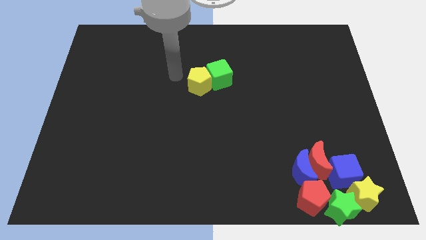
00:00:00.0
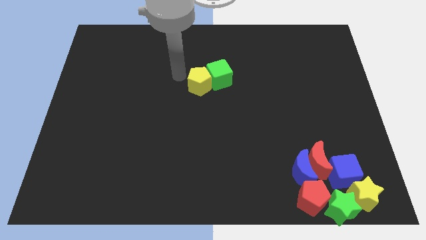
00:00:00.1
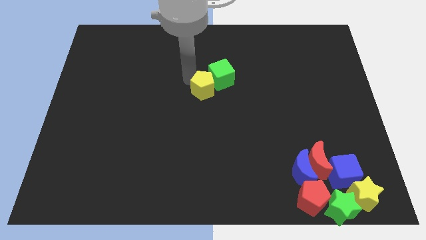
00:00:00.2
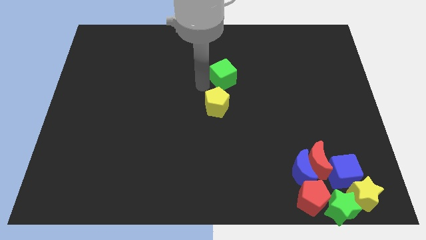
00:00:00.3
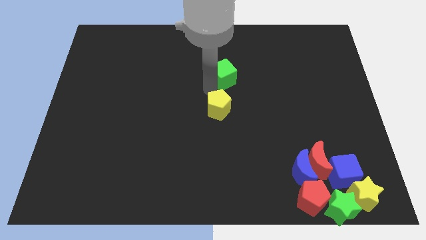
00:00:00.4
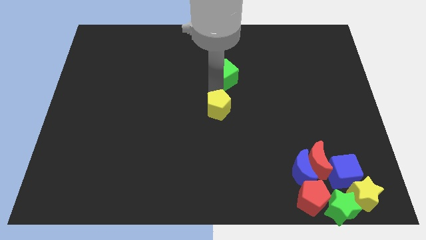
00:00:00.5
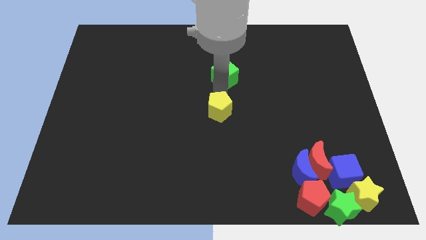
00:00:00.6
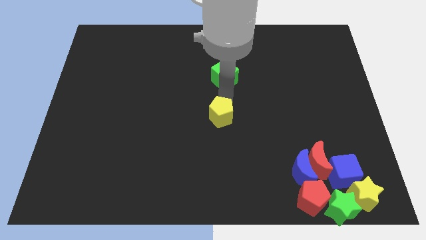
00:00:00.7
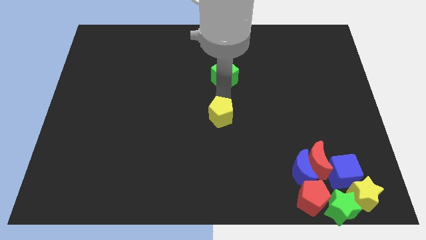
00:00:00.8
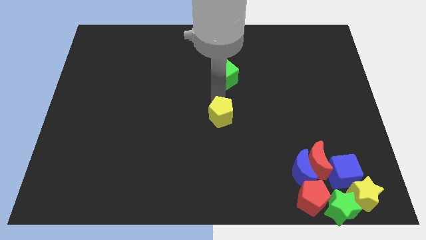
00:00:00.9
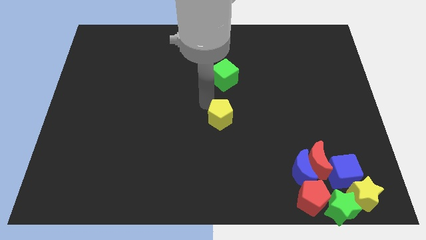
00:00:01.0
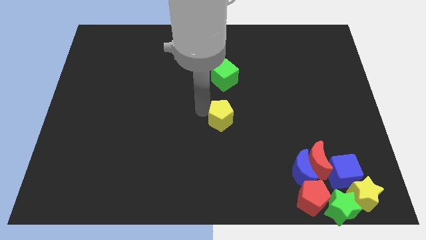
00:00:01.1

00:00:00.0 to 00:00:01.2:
separate the yellow pentagon from the green cube

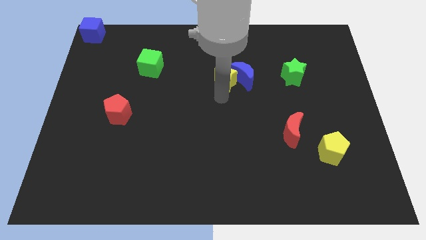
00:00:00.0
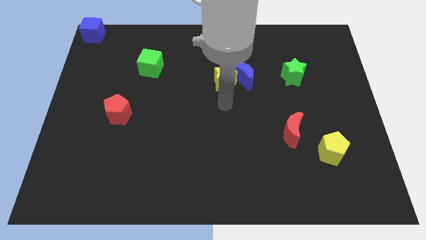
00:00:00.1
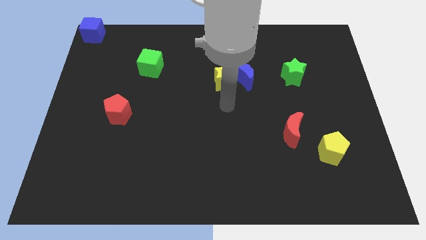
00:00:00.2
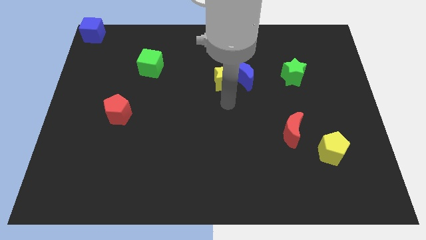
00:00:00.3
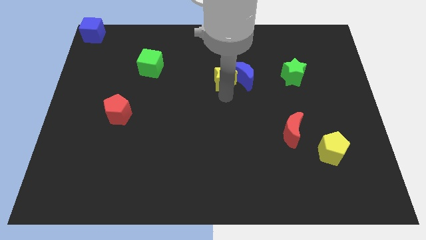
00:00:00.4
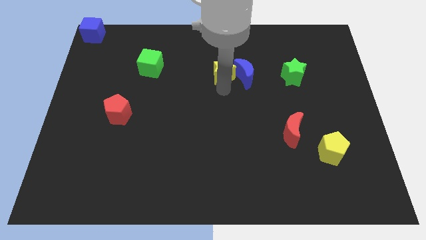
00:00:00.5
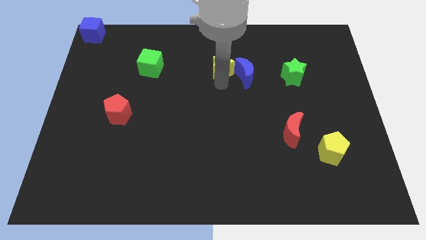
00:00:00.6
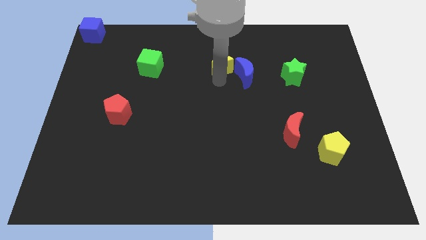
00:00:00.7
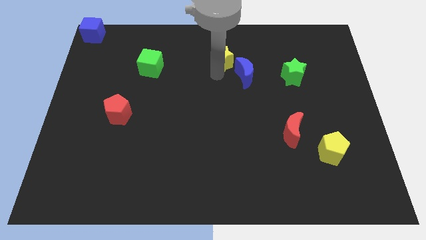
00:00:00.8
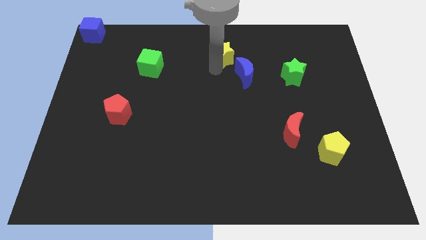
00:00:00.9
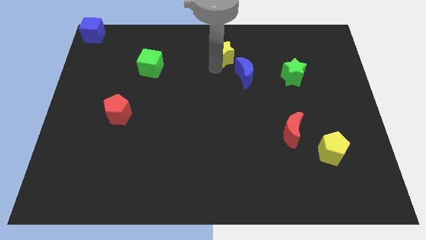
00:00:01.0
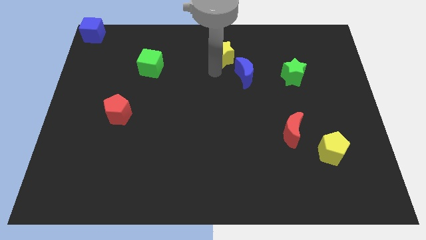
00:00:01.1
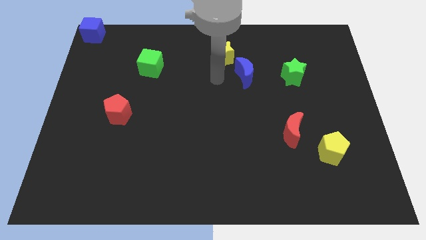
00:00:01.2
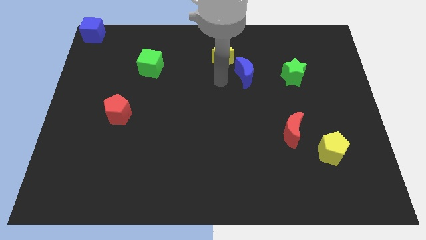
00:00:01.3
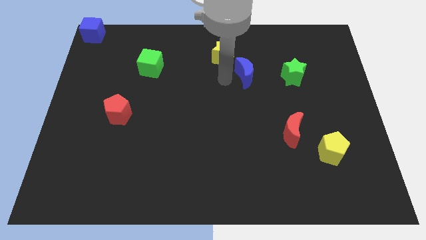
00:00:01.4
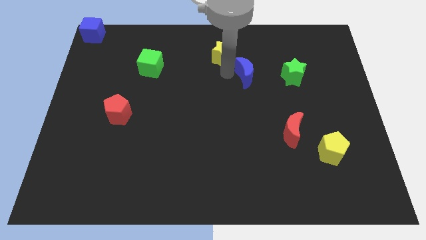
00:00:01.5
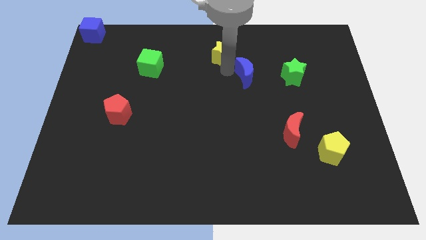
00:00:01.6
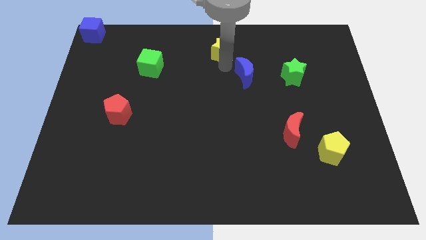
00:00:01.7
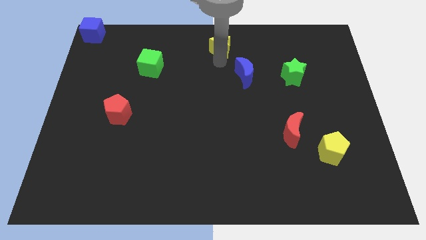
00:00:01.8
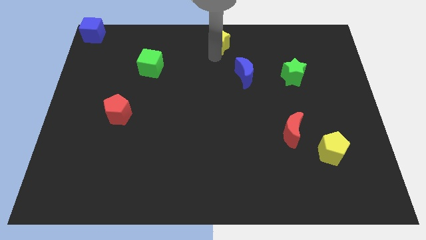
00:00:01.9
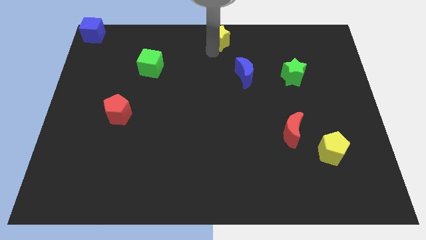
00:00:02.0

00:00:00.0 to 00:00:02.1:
separate the yellow star away from the blue crescent

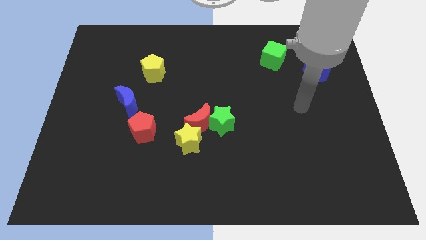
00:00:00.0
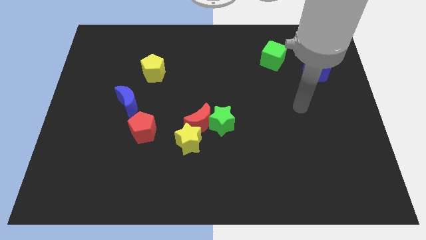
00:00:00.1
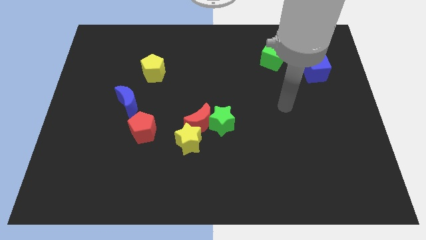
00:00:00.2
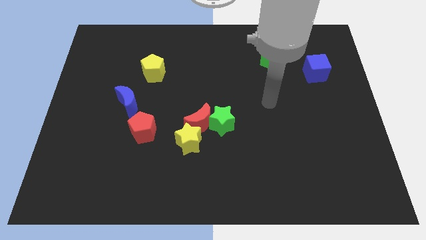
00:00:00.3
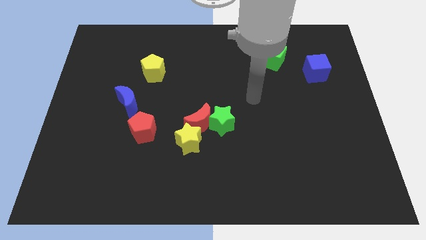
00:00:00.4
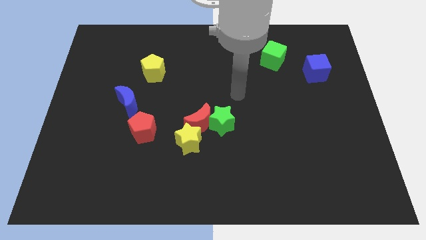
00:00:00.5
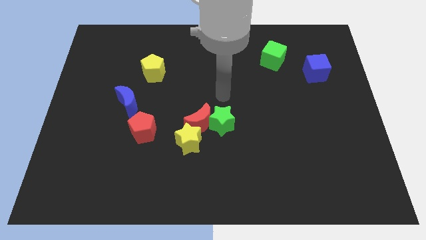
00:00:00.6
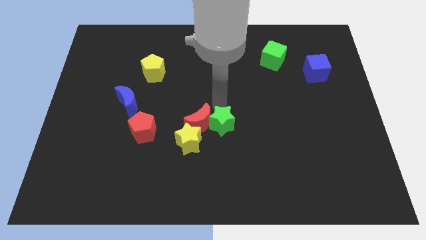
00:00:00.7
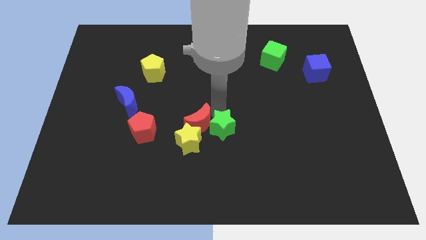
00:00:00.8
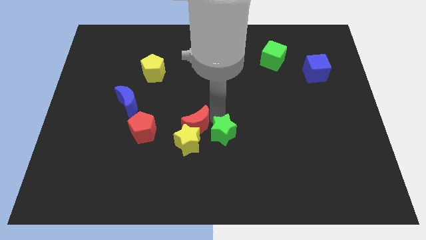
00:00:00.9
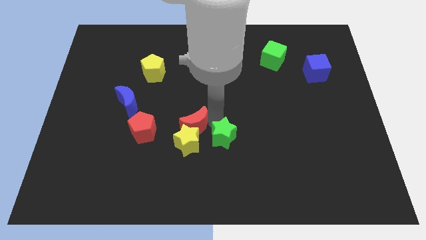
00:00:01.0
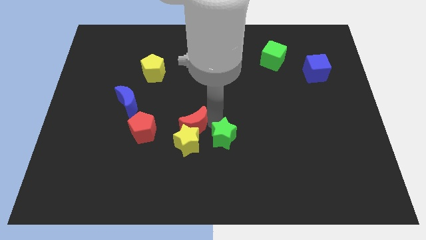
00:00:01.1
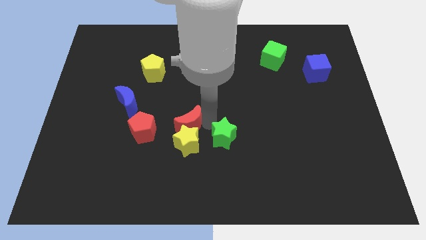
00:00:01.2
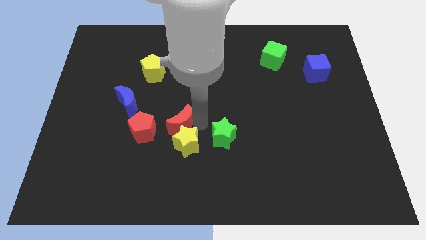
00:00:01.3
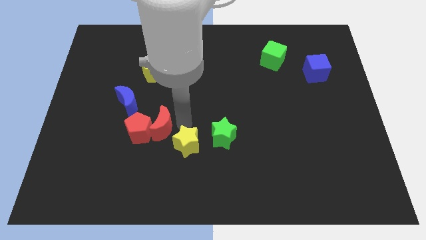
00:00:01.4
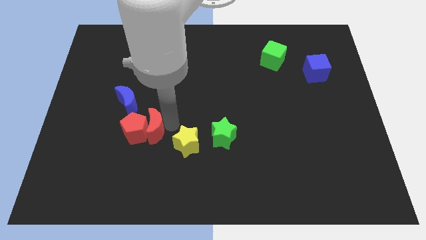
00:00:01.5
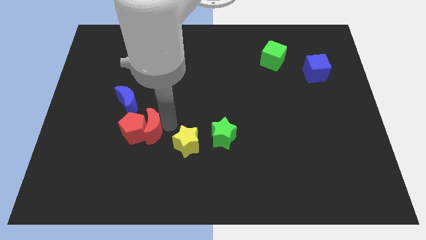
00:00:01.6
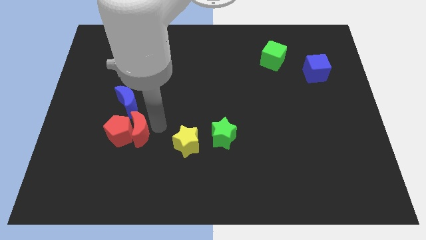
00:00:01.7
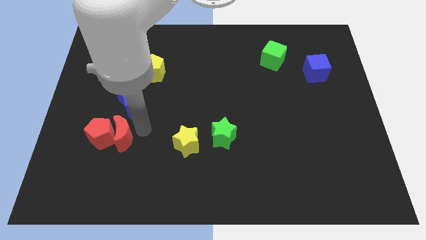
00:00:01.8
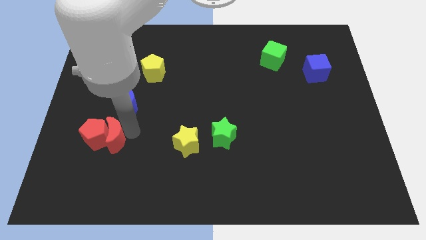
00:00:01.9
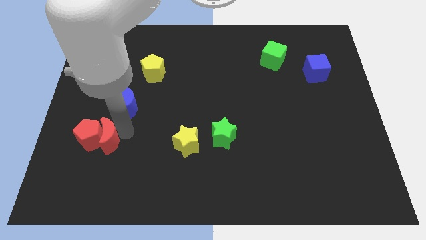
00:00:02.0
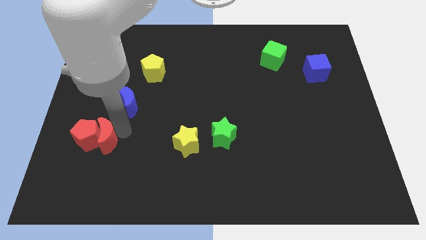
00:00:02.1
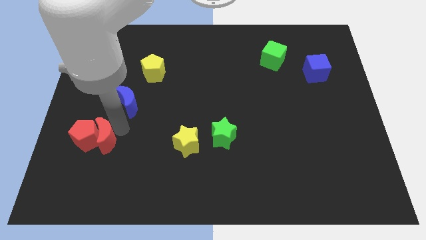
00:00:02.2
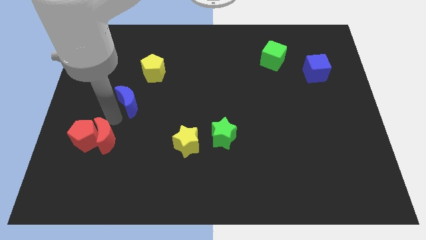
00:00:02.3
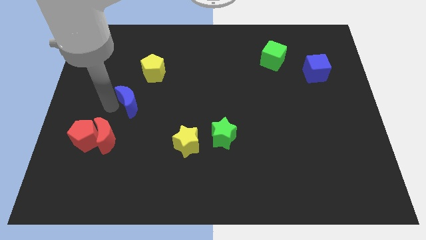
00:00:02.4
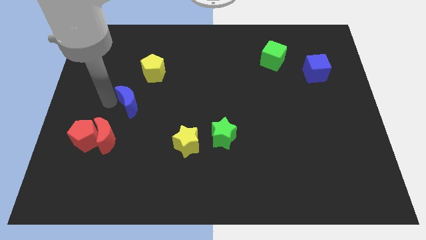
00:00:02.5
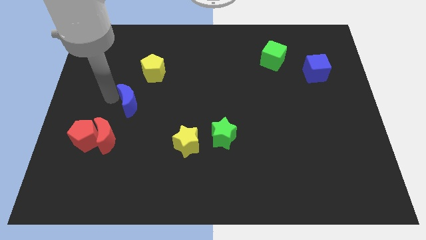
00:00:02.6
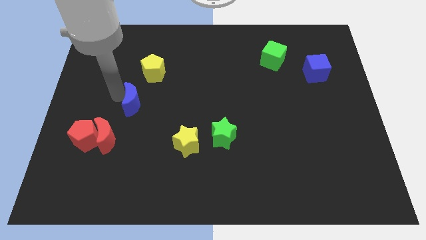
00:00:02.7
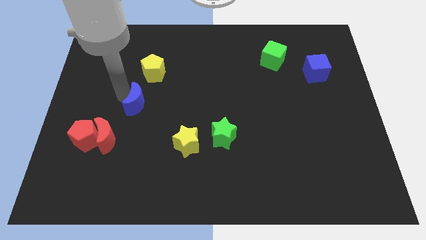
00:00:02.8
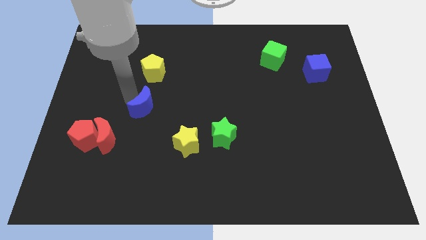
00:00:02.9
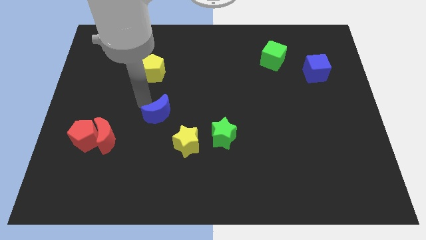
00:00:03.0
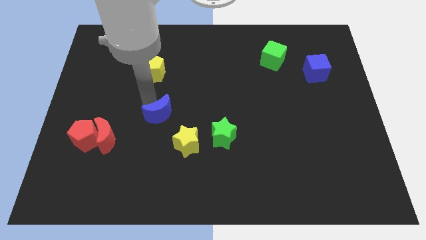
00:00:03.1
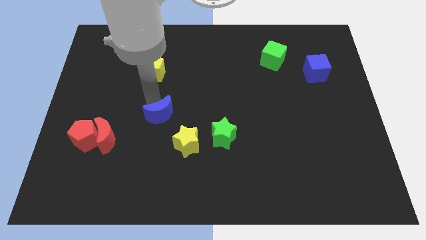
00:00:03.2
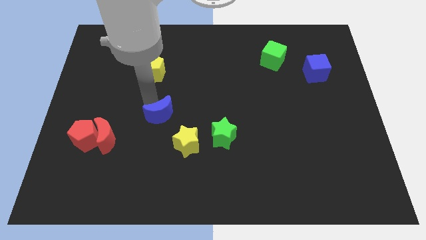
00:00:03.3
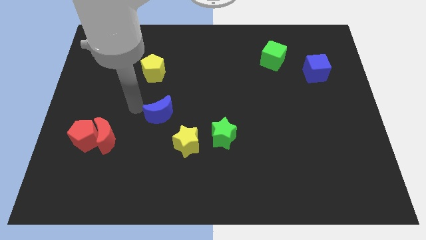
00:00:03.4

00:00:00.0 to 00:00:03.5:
push the red crescent into the red pentagon

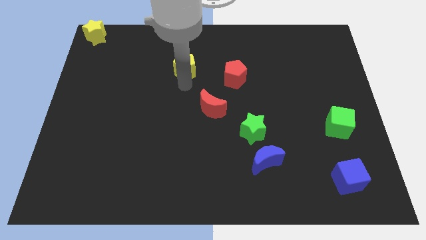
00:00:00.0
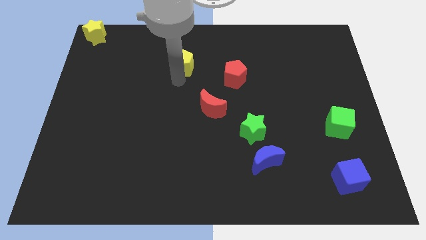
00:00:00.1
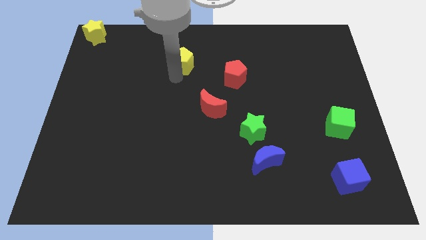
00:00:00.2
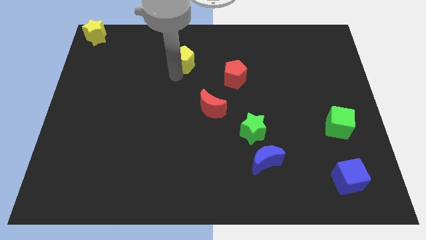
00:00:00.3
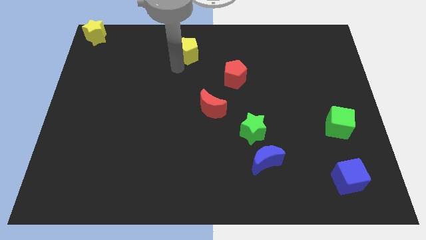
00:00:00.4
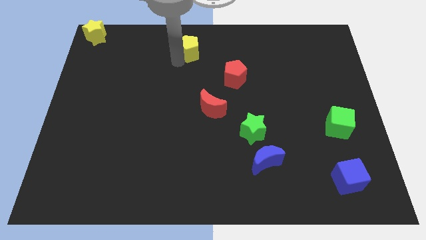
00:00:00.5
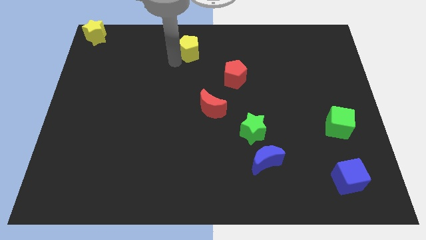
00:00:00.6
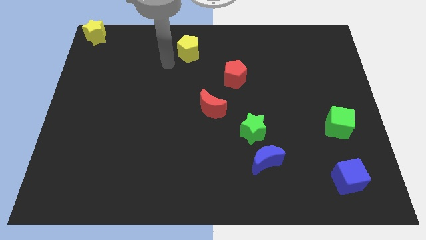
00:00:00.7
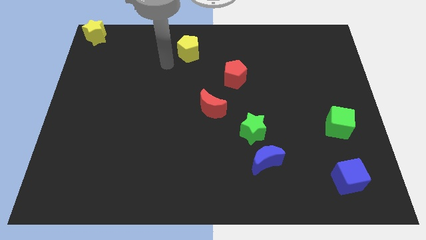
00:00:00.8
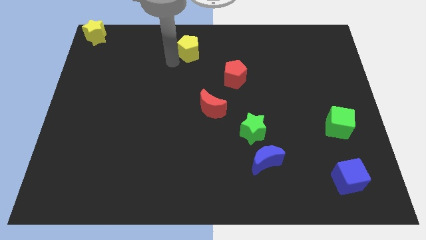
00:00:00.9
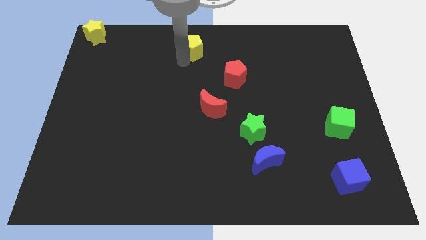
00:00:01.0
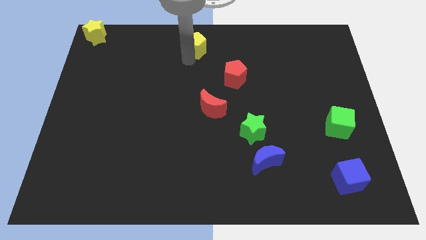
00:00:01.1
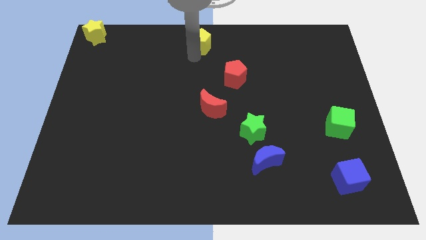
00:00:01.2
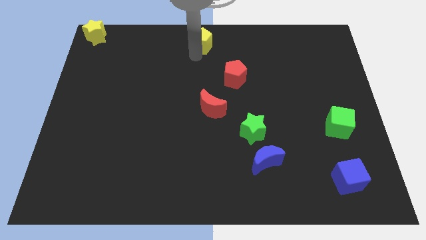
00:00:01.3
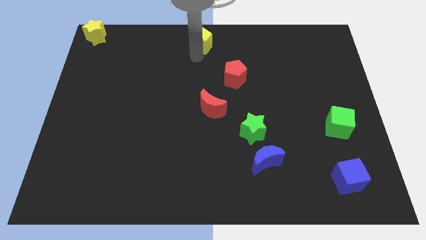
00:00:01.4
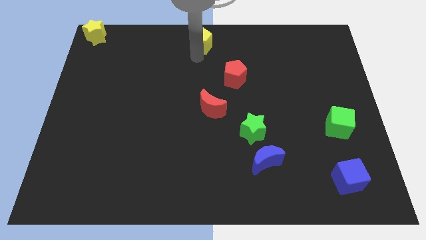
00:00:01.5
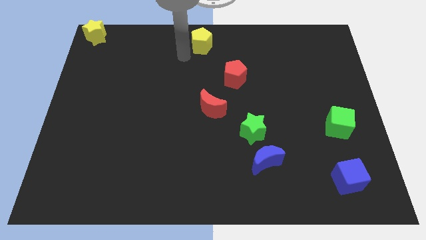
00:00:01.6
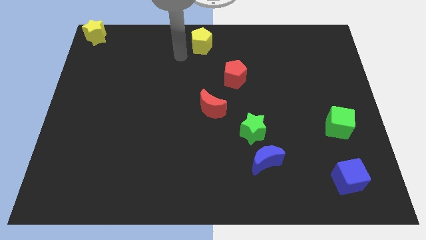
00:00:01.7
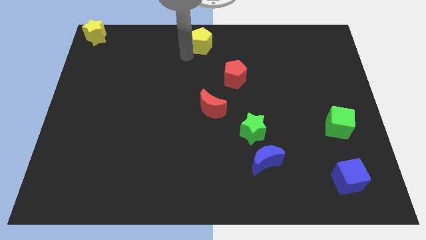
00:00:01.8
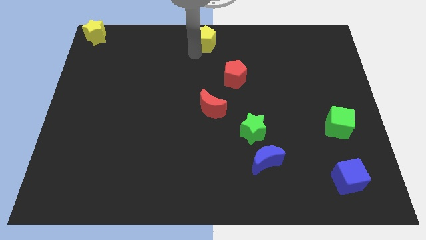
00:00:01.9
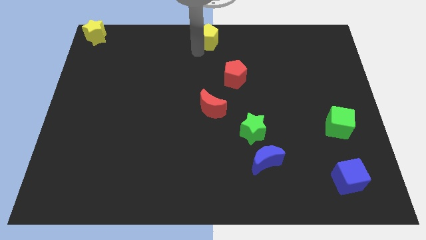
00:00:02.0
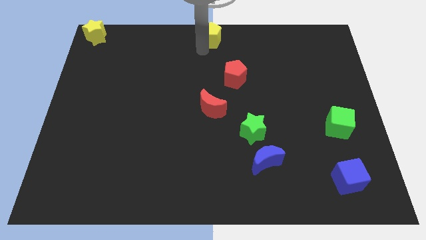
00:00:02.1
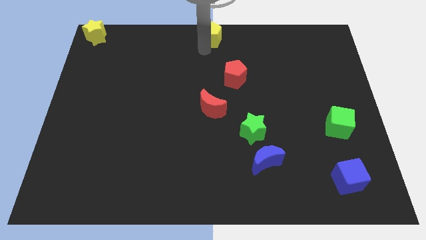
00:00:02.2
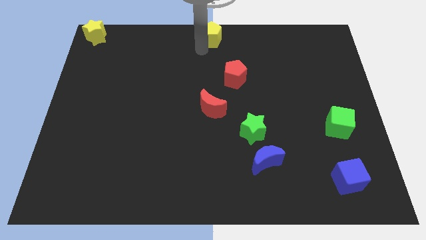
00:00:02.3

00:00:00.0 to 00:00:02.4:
push the yellow pentagon to the top center of the board
